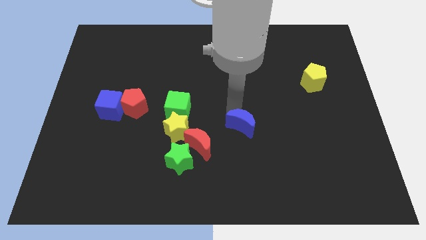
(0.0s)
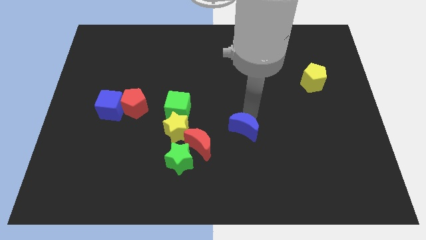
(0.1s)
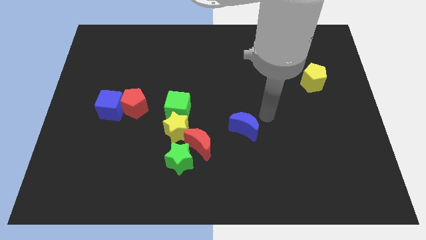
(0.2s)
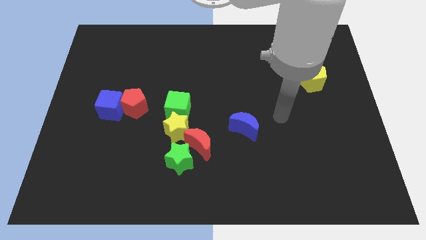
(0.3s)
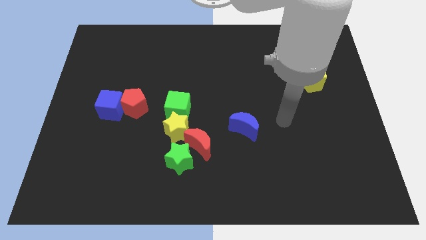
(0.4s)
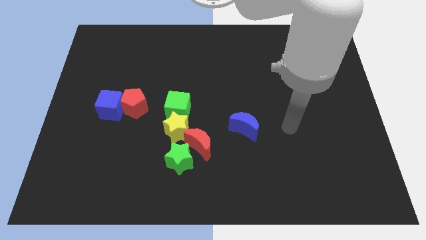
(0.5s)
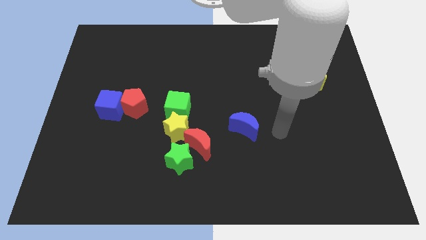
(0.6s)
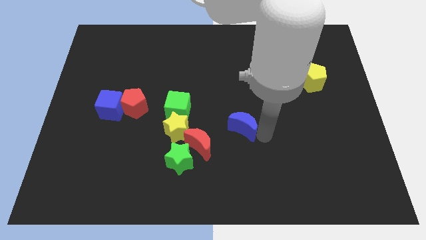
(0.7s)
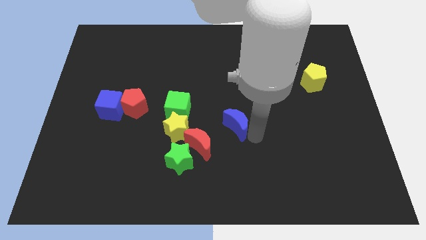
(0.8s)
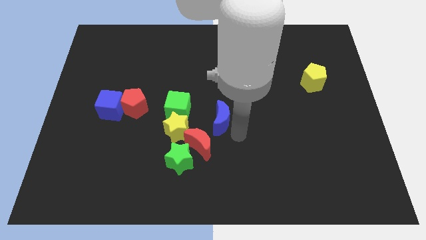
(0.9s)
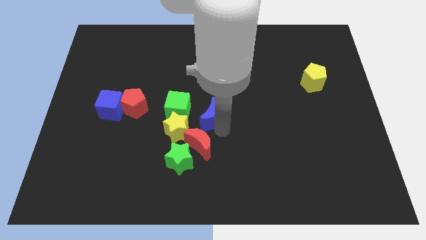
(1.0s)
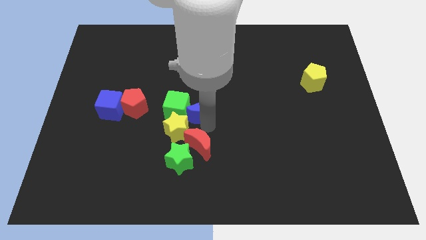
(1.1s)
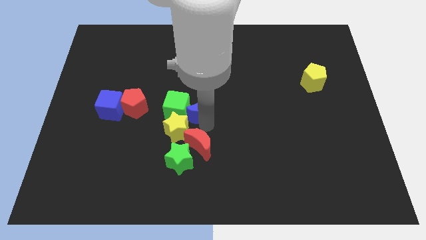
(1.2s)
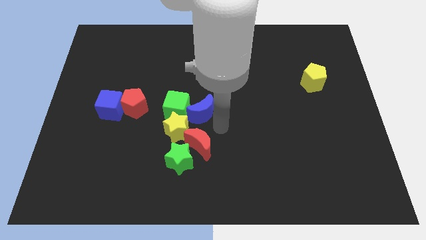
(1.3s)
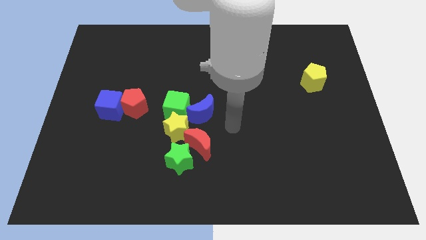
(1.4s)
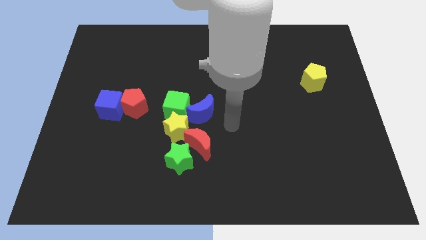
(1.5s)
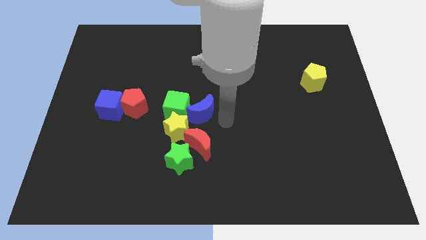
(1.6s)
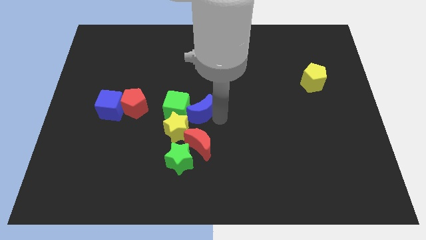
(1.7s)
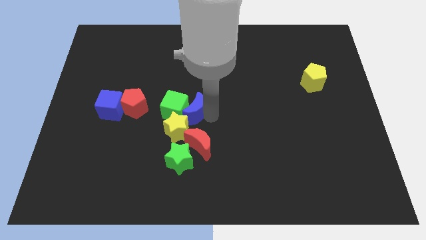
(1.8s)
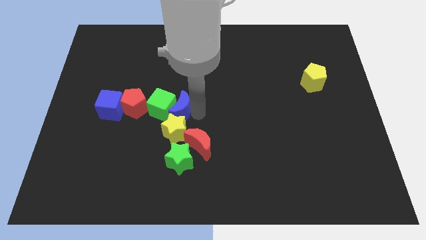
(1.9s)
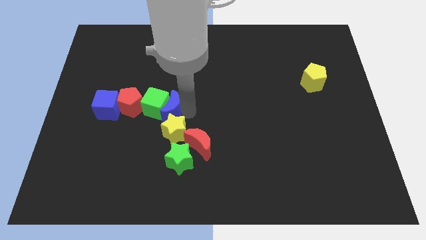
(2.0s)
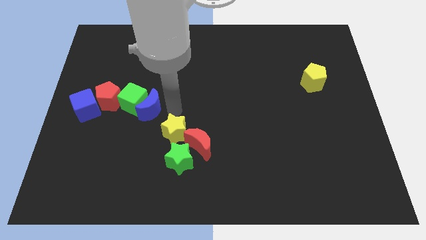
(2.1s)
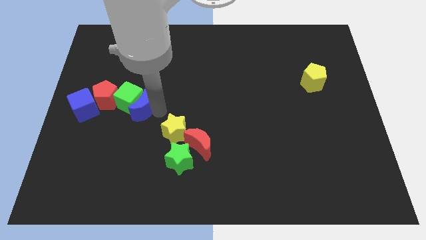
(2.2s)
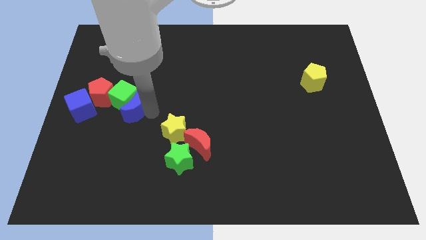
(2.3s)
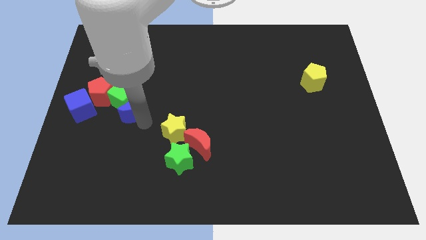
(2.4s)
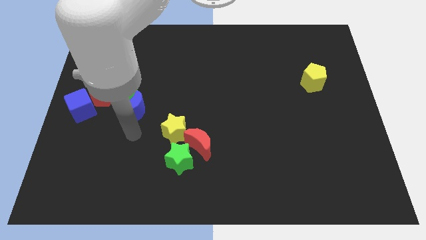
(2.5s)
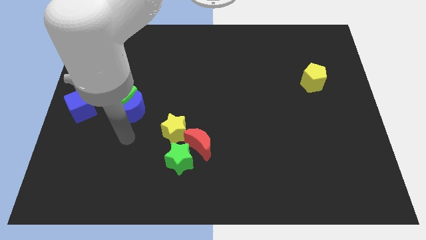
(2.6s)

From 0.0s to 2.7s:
push the blue moon into the green cube

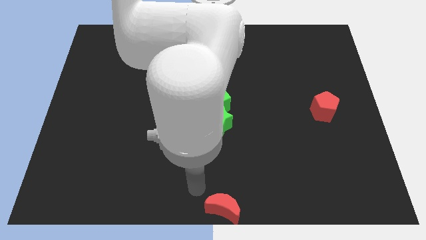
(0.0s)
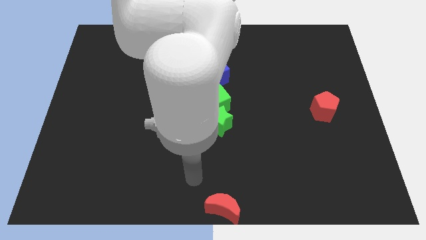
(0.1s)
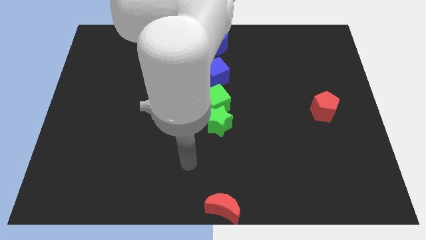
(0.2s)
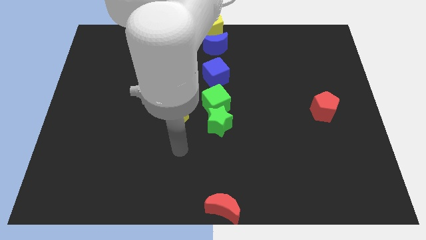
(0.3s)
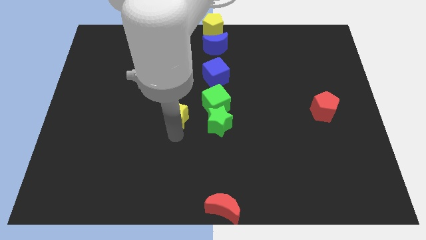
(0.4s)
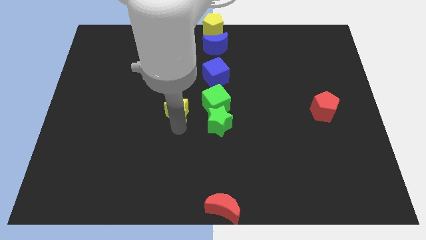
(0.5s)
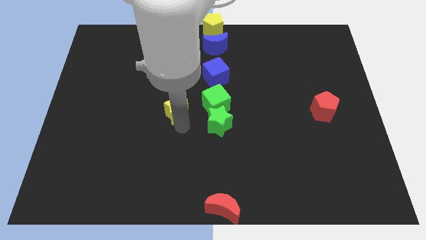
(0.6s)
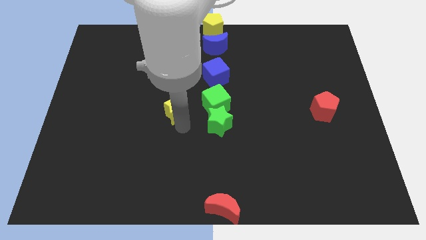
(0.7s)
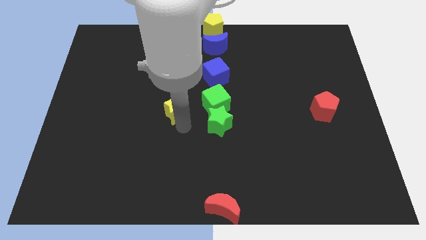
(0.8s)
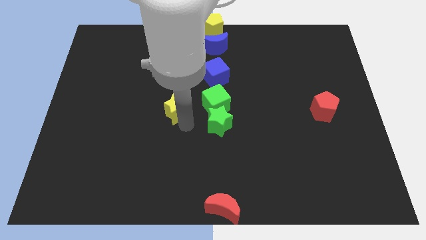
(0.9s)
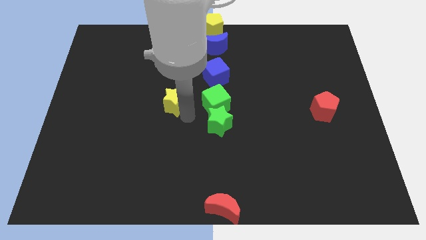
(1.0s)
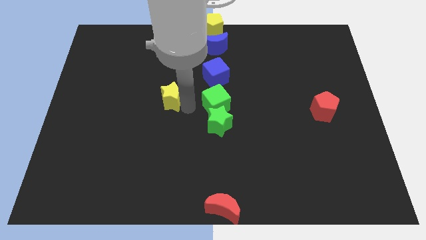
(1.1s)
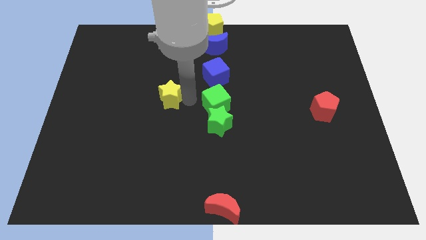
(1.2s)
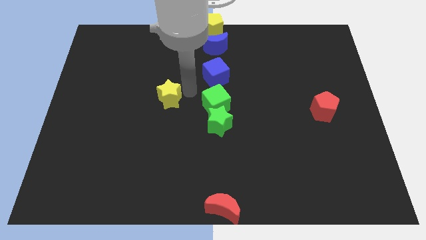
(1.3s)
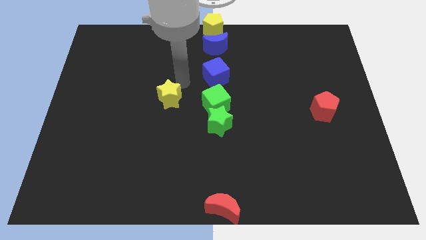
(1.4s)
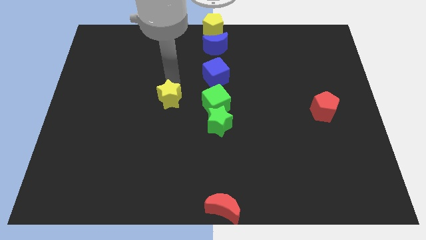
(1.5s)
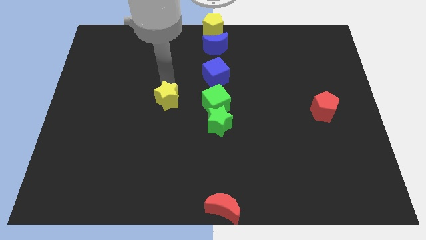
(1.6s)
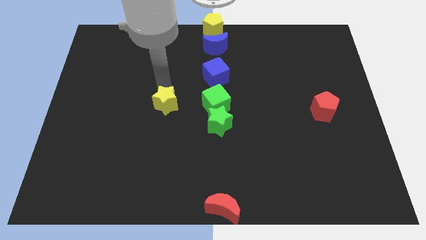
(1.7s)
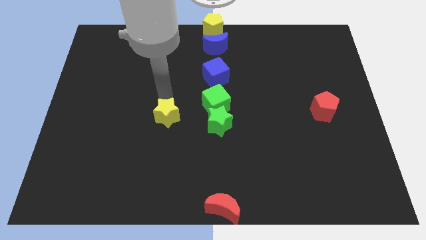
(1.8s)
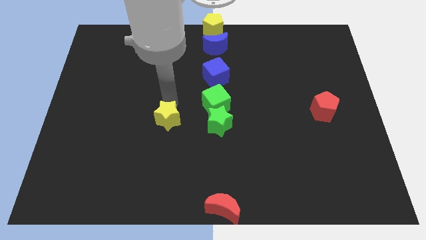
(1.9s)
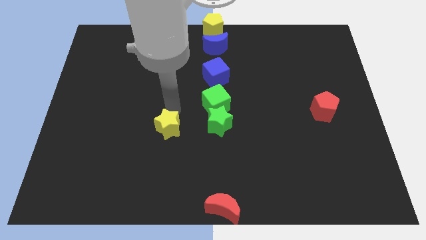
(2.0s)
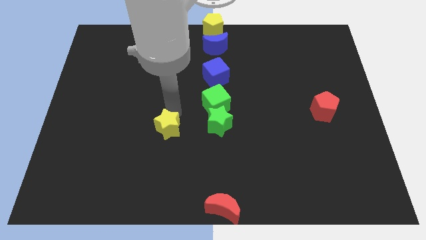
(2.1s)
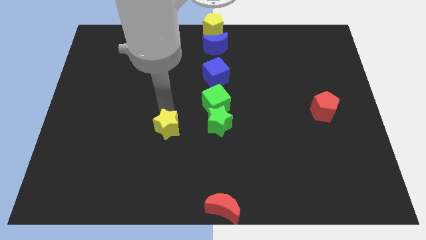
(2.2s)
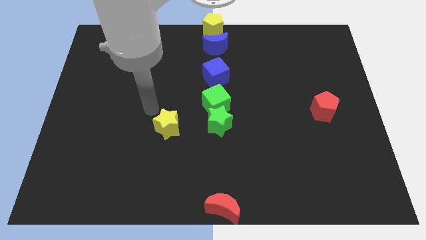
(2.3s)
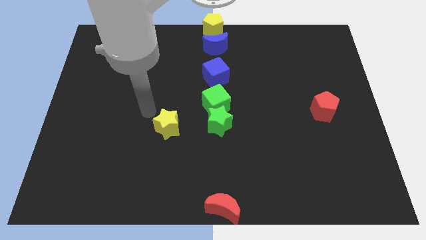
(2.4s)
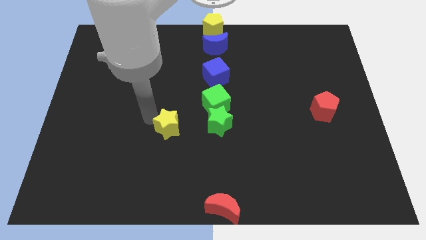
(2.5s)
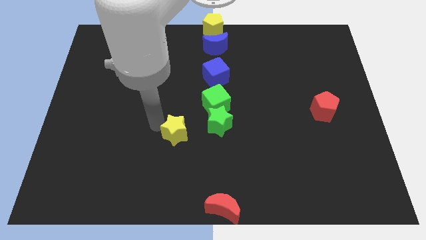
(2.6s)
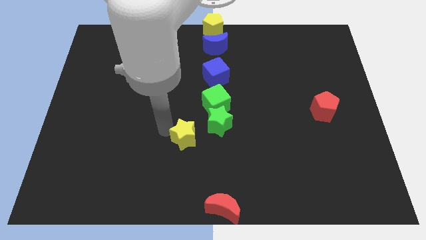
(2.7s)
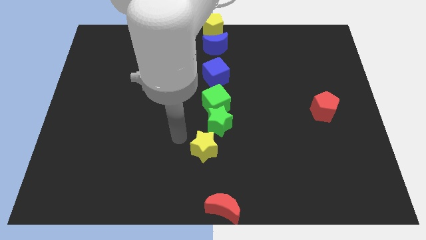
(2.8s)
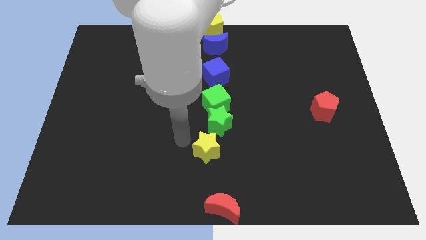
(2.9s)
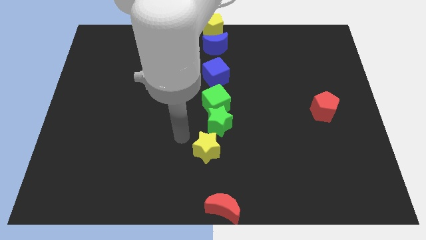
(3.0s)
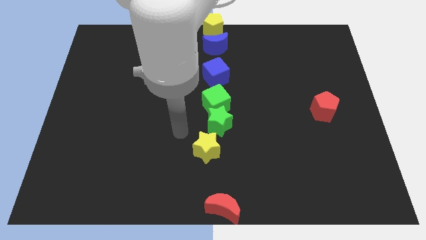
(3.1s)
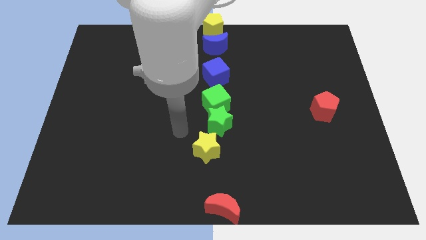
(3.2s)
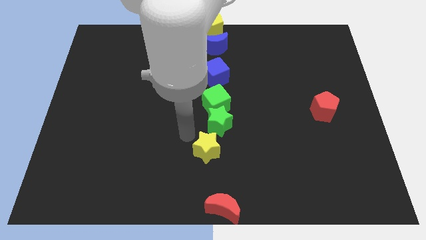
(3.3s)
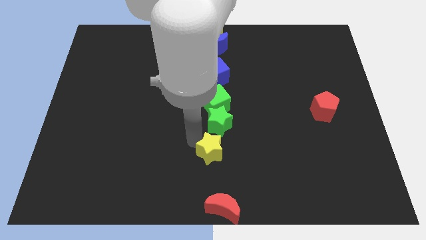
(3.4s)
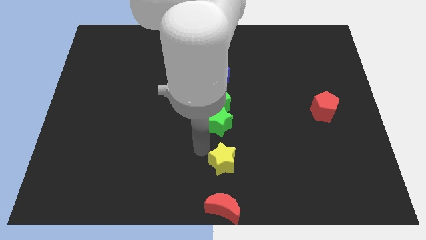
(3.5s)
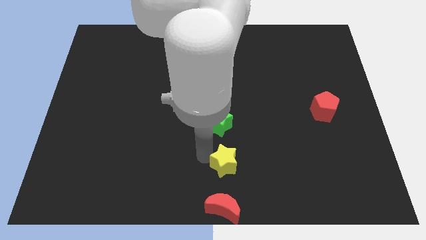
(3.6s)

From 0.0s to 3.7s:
place the yellow star to the bottom of green star

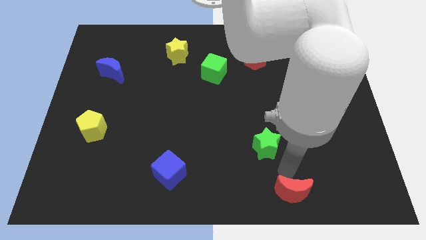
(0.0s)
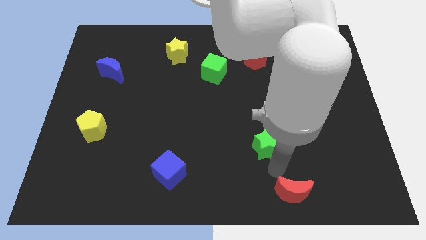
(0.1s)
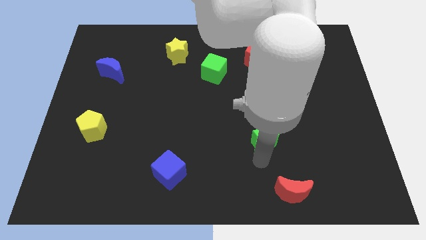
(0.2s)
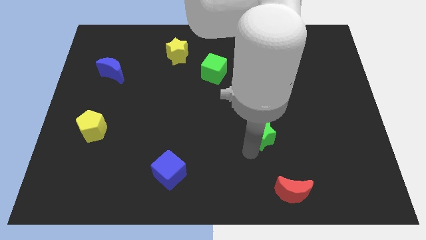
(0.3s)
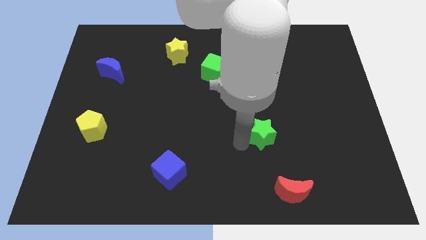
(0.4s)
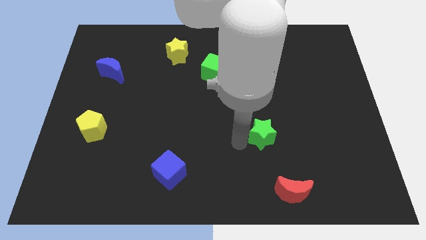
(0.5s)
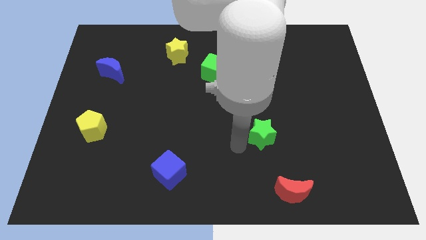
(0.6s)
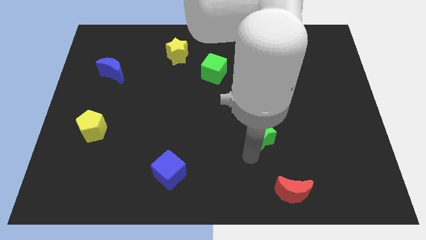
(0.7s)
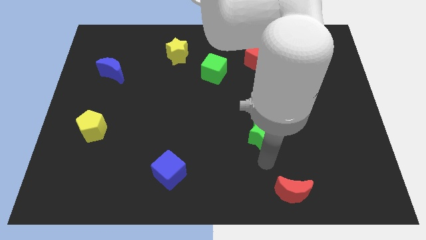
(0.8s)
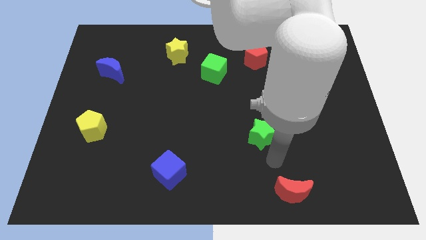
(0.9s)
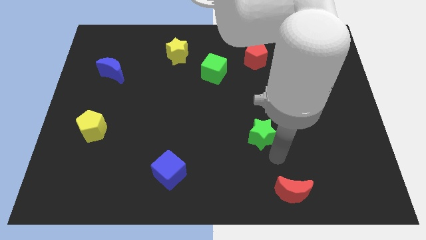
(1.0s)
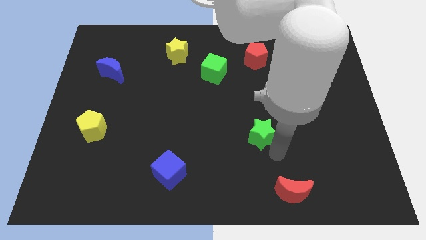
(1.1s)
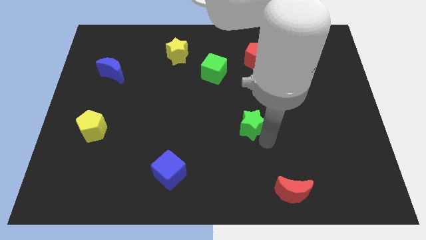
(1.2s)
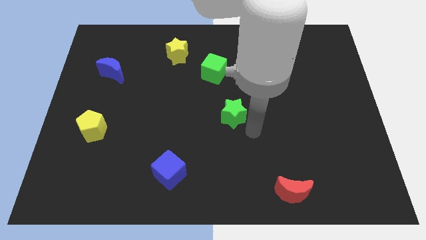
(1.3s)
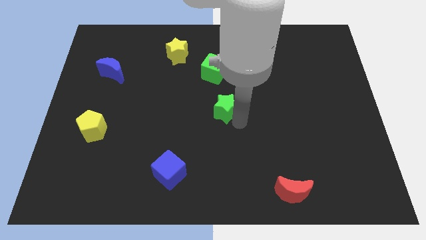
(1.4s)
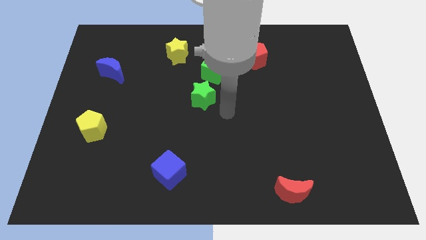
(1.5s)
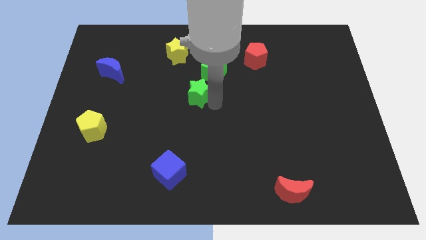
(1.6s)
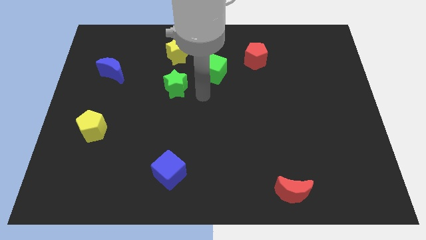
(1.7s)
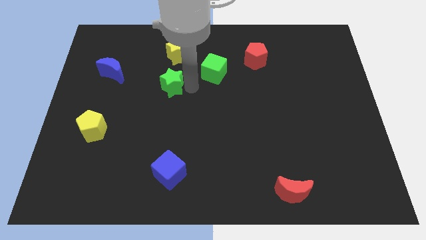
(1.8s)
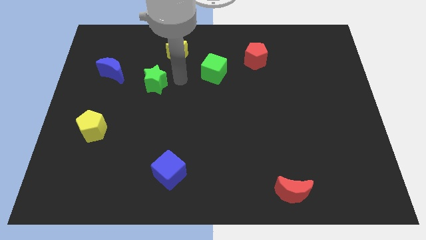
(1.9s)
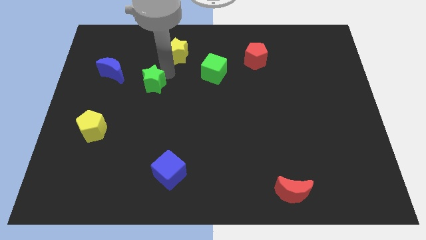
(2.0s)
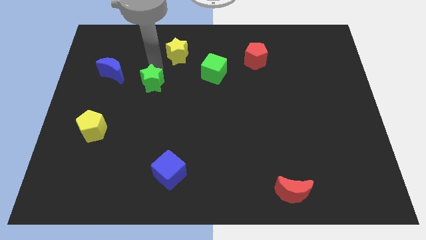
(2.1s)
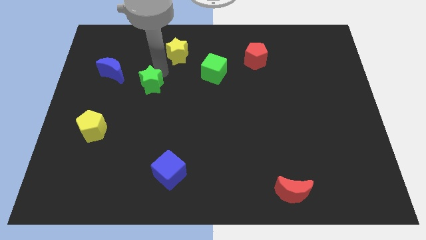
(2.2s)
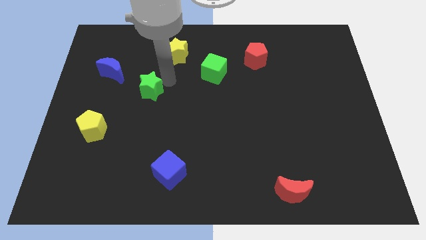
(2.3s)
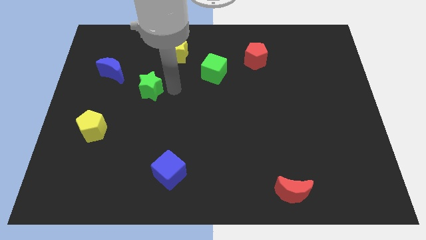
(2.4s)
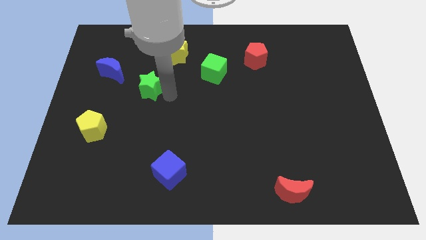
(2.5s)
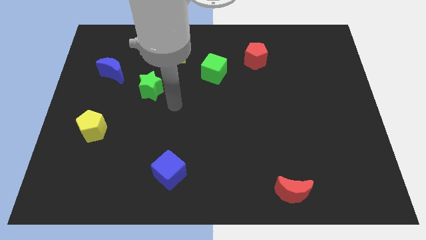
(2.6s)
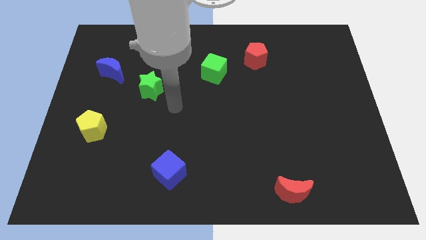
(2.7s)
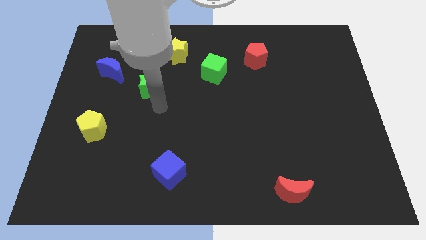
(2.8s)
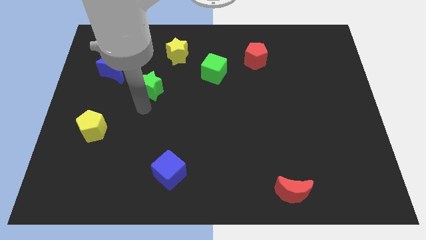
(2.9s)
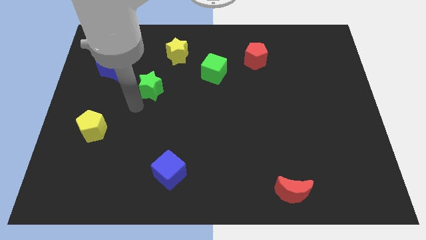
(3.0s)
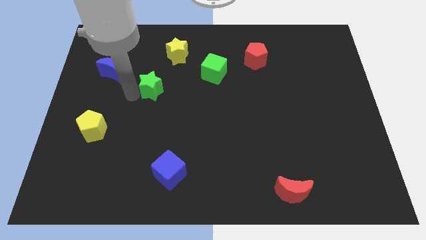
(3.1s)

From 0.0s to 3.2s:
move the green star diagonally bottom left to the yellow star
